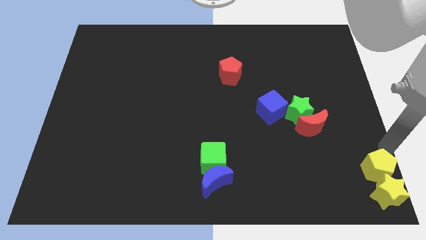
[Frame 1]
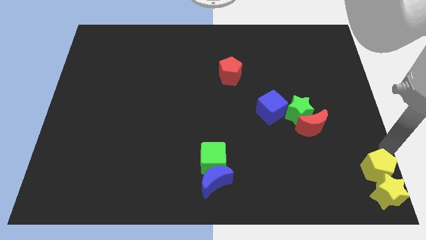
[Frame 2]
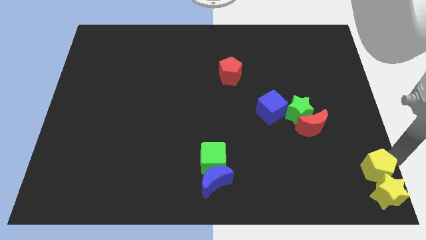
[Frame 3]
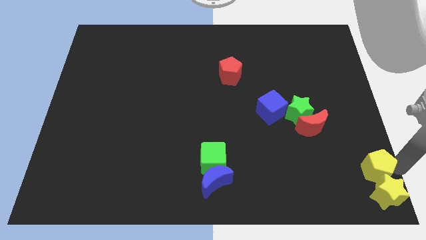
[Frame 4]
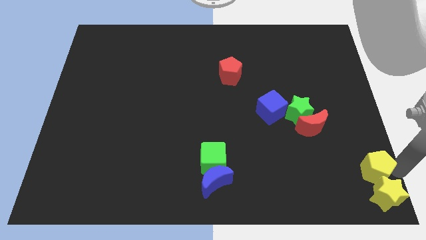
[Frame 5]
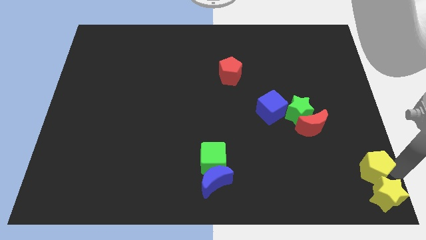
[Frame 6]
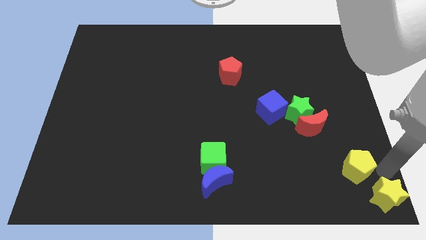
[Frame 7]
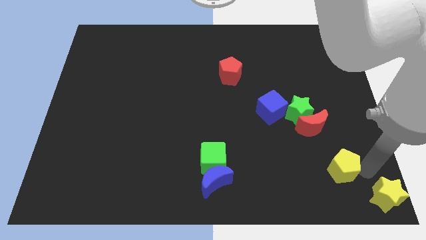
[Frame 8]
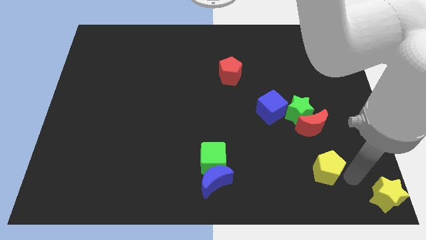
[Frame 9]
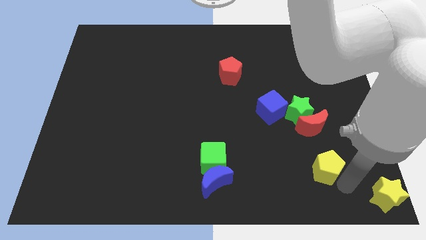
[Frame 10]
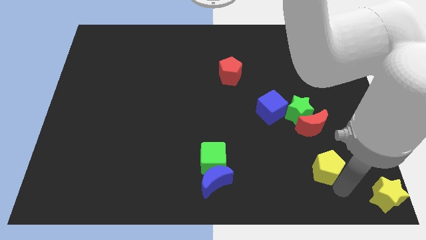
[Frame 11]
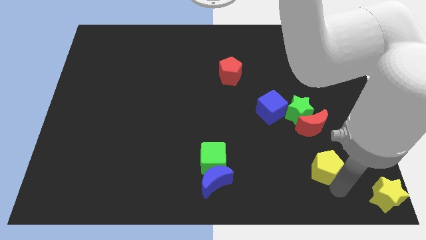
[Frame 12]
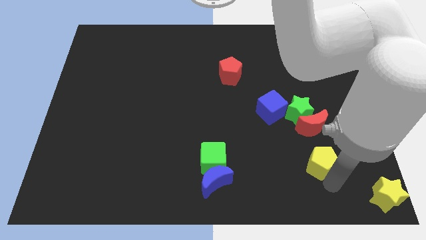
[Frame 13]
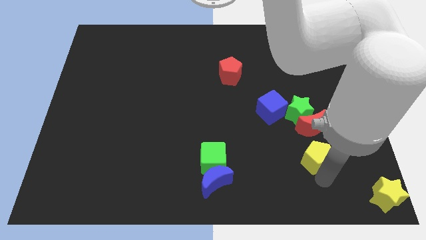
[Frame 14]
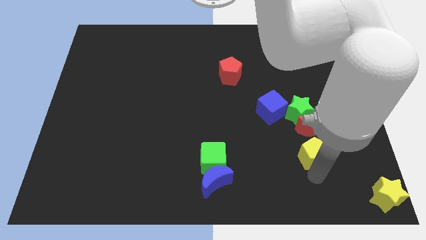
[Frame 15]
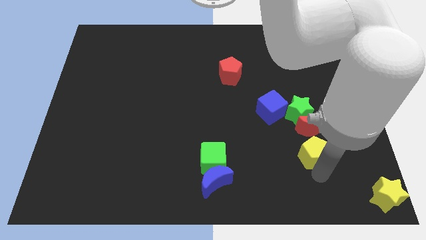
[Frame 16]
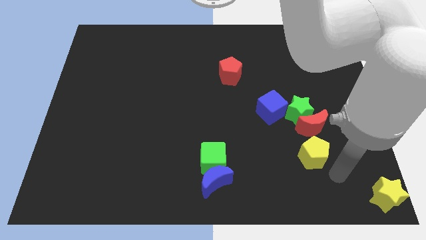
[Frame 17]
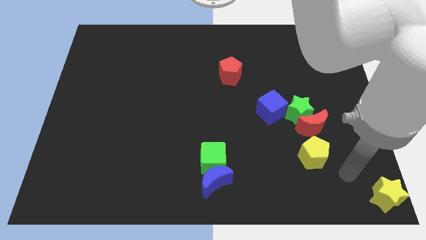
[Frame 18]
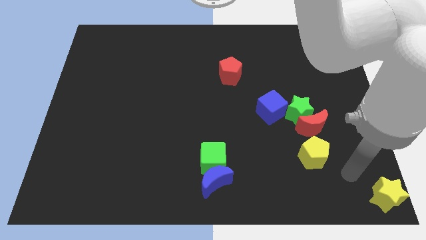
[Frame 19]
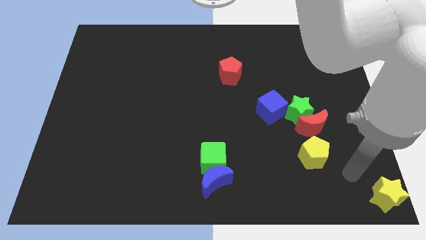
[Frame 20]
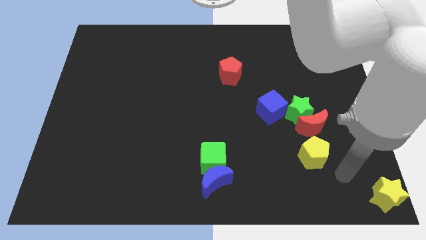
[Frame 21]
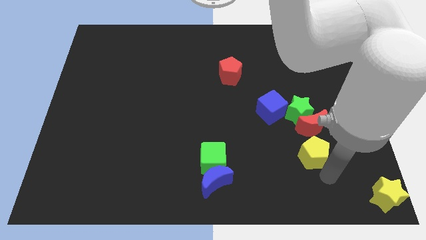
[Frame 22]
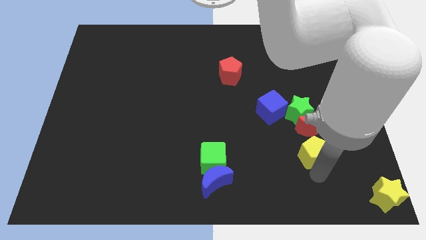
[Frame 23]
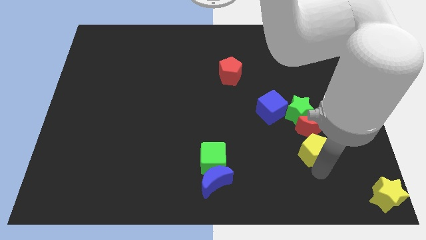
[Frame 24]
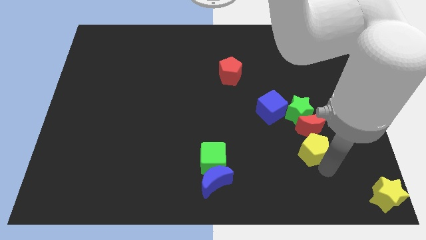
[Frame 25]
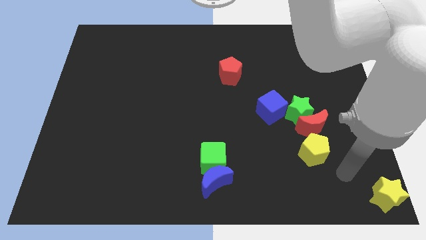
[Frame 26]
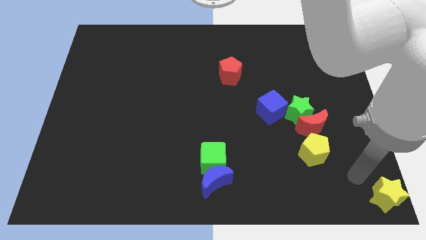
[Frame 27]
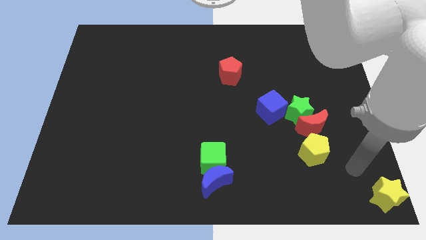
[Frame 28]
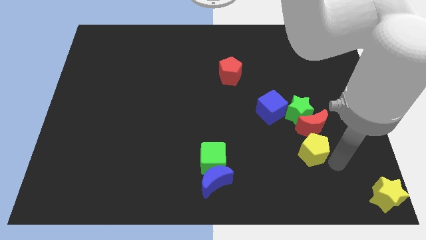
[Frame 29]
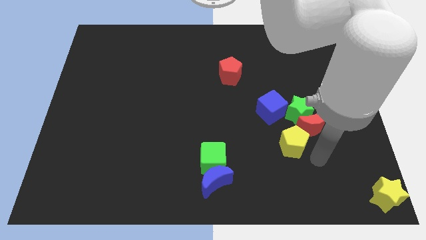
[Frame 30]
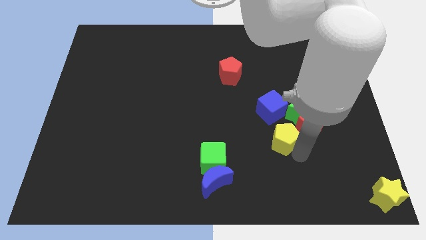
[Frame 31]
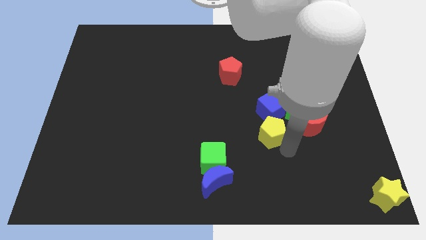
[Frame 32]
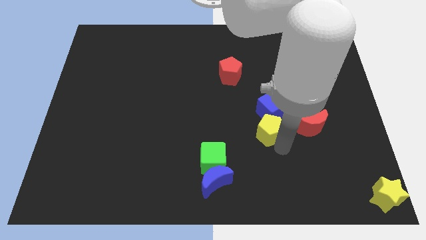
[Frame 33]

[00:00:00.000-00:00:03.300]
place the yellow pentagon below the blue cube

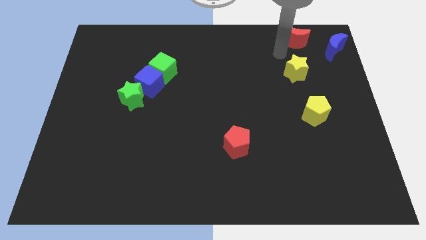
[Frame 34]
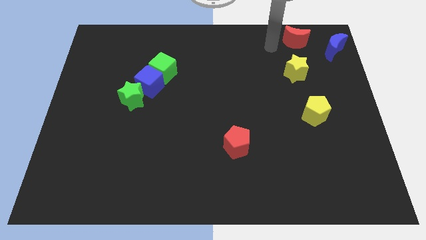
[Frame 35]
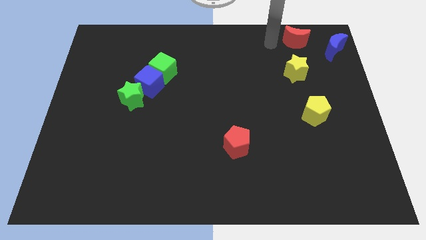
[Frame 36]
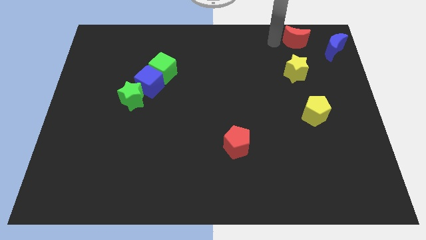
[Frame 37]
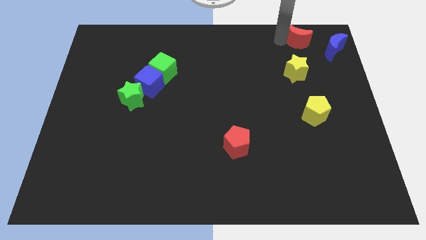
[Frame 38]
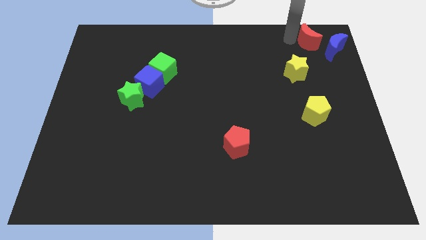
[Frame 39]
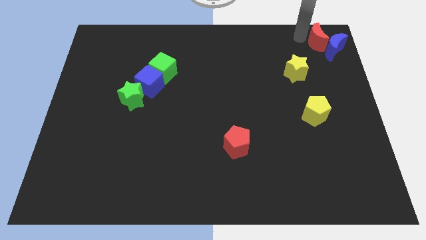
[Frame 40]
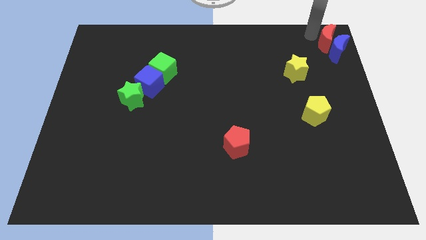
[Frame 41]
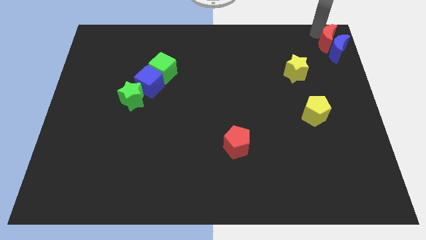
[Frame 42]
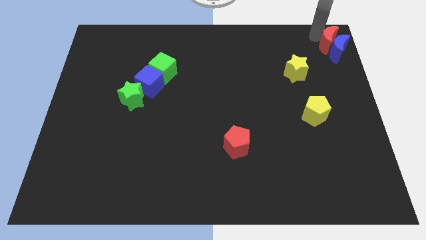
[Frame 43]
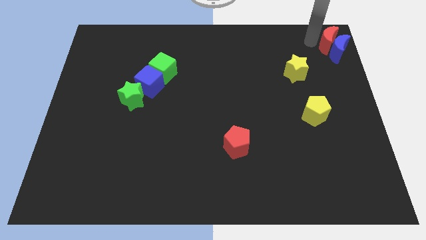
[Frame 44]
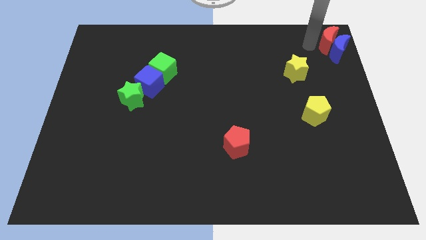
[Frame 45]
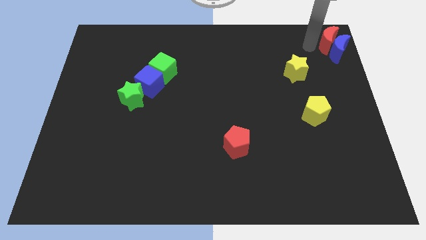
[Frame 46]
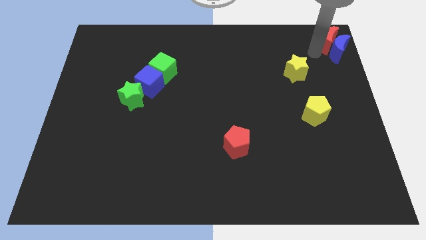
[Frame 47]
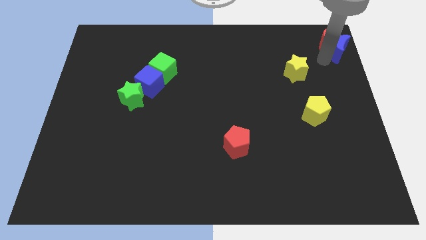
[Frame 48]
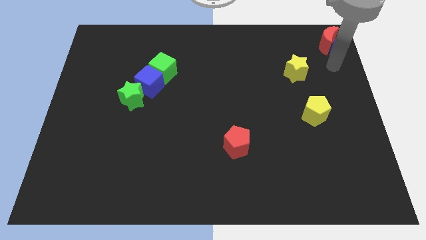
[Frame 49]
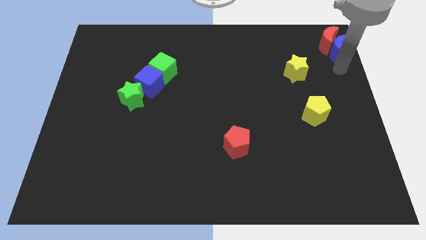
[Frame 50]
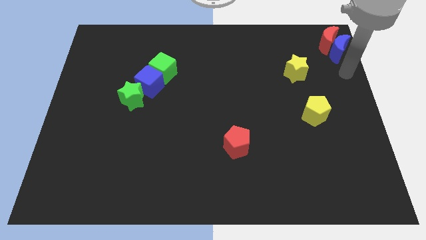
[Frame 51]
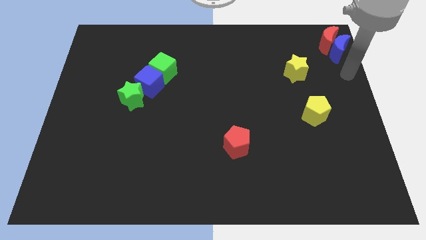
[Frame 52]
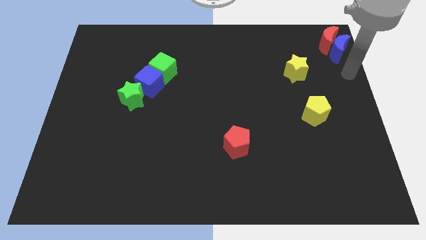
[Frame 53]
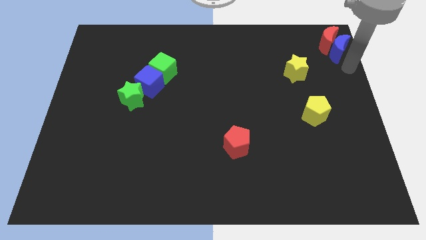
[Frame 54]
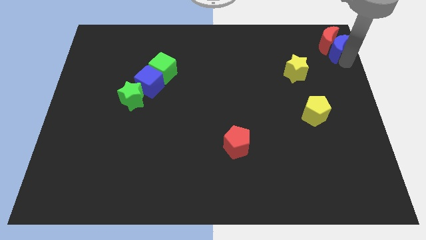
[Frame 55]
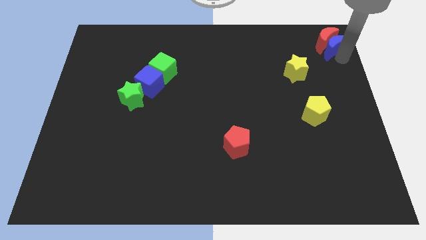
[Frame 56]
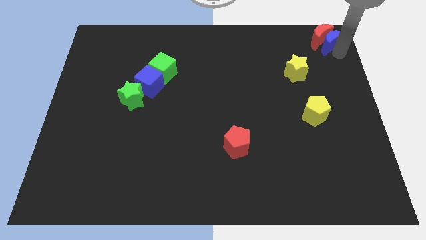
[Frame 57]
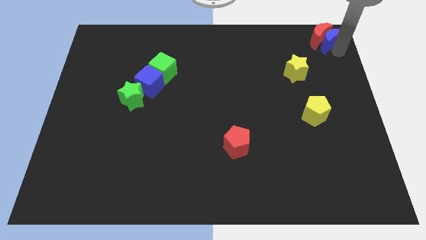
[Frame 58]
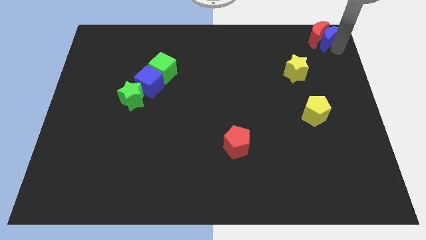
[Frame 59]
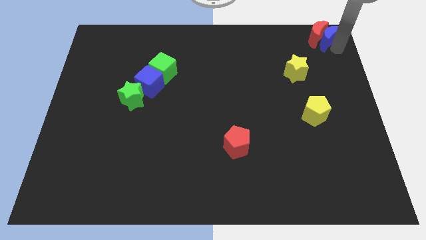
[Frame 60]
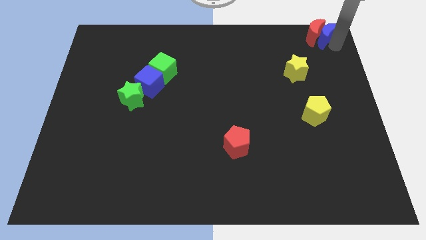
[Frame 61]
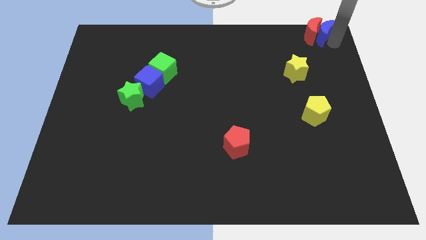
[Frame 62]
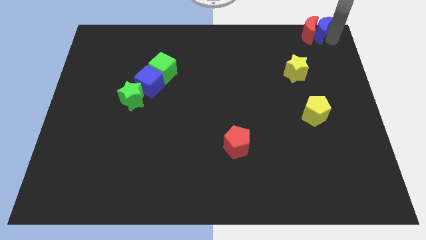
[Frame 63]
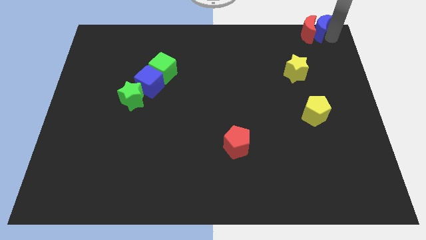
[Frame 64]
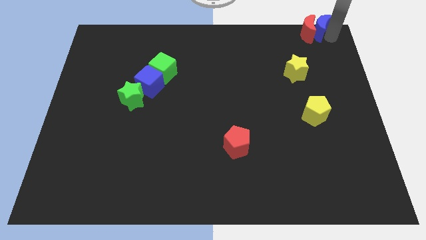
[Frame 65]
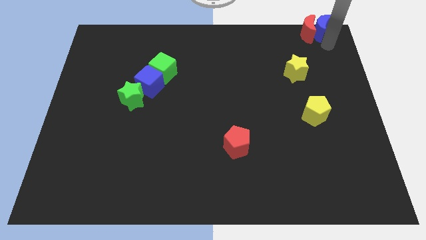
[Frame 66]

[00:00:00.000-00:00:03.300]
put the blue moon and red moon together at the top right side of the board

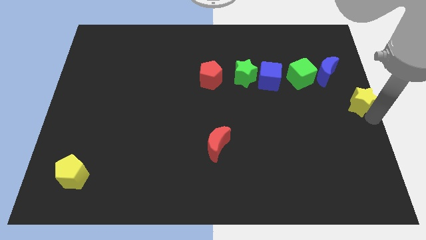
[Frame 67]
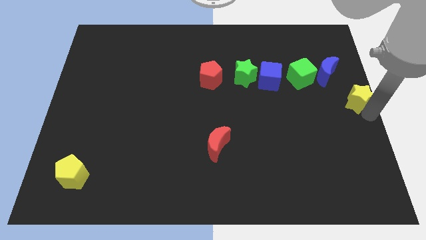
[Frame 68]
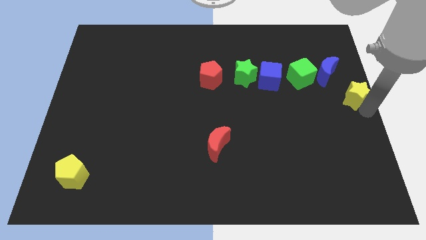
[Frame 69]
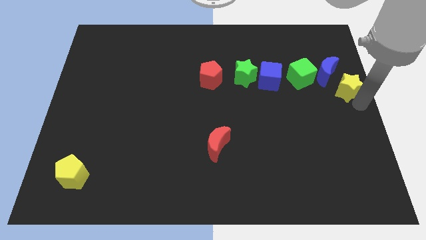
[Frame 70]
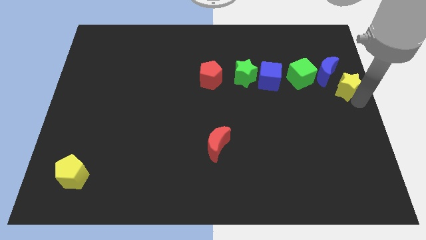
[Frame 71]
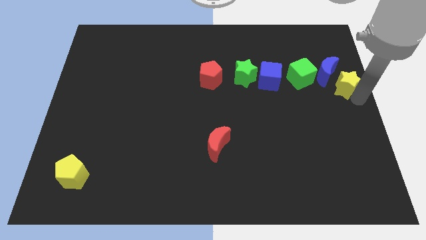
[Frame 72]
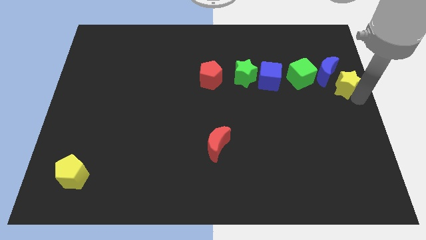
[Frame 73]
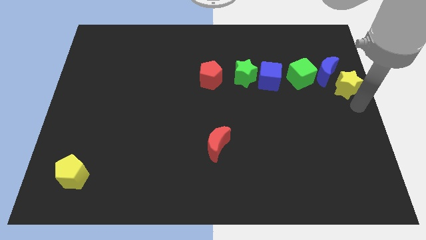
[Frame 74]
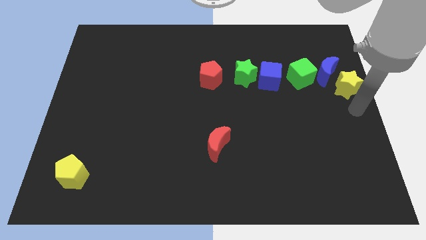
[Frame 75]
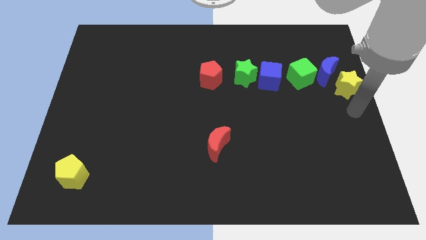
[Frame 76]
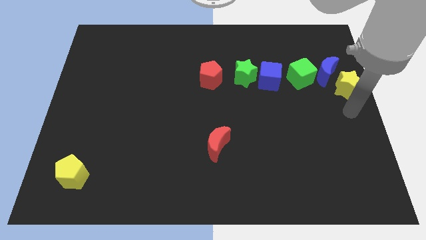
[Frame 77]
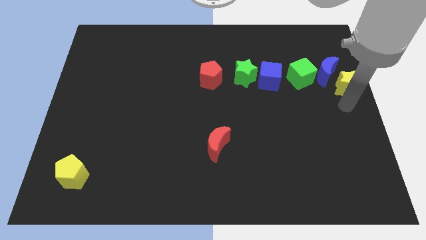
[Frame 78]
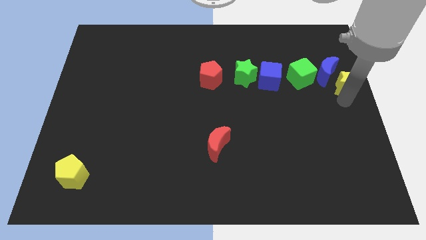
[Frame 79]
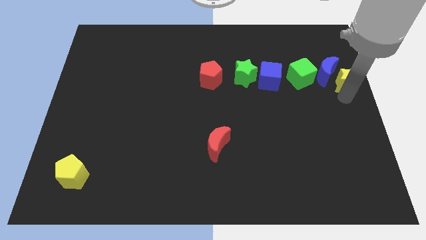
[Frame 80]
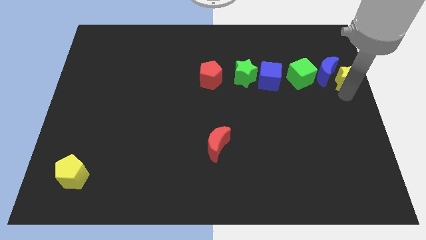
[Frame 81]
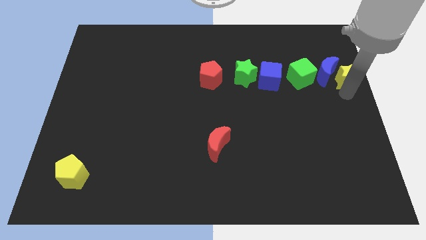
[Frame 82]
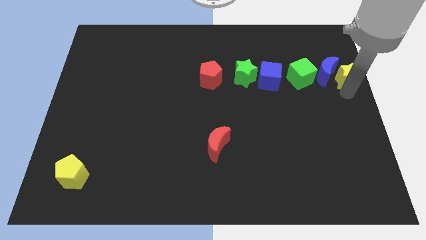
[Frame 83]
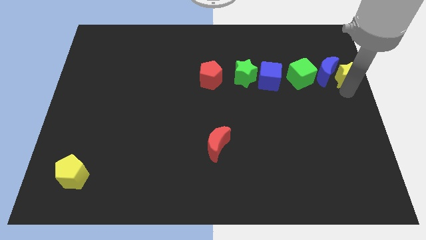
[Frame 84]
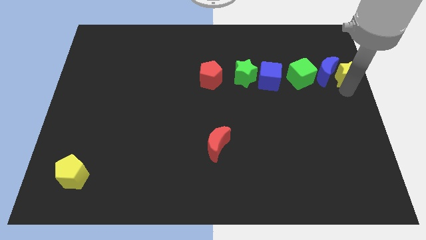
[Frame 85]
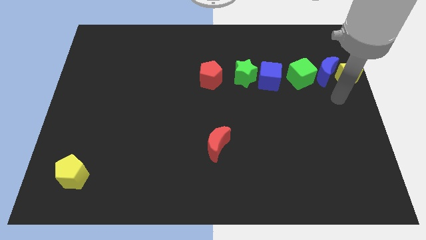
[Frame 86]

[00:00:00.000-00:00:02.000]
place the yellow star to the right of the blue crescent

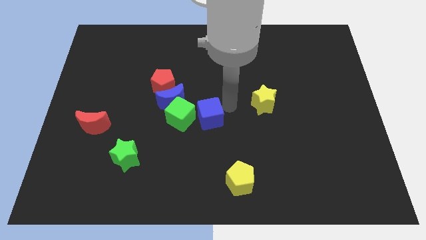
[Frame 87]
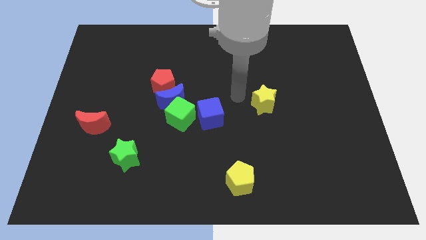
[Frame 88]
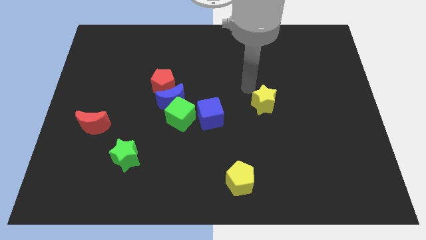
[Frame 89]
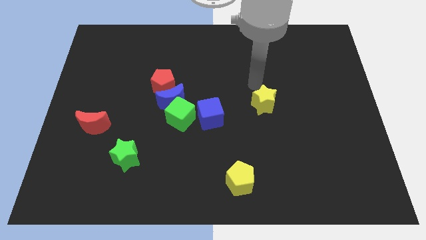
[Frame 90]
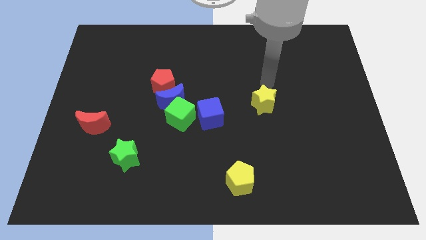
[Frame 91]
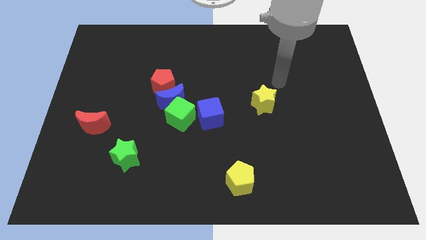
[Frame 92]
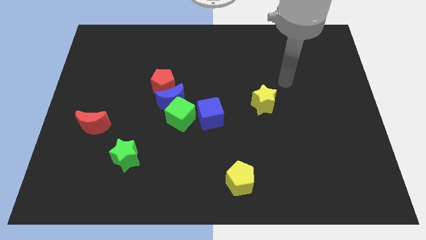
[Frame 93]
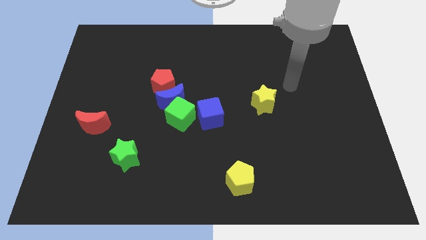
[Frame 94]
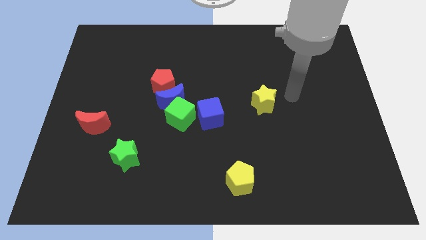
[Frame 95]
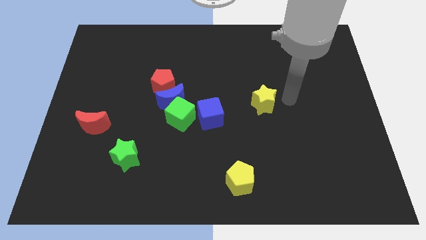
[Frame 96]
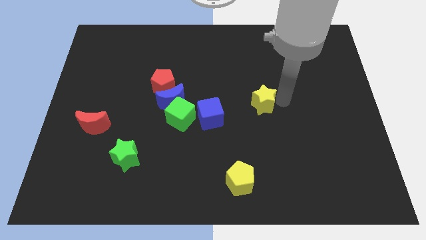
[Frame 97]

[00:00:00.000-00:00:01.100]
move your arm right of the yellow star
